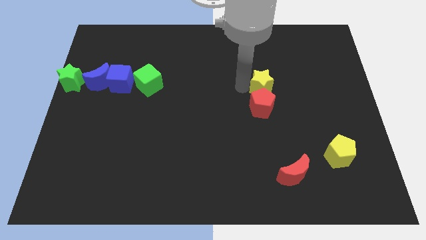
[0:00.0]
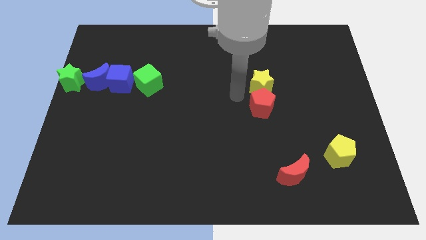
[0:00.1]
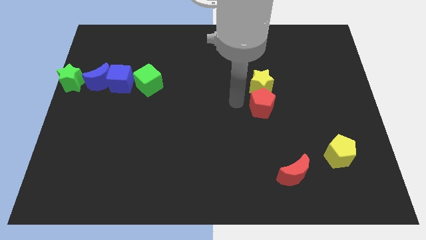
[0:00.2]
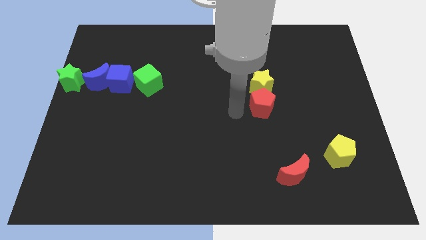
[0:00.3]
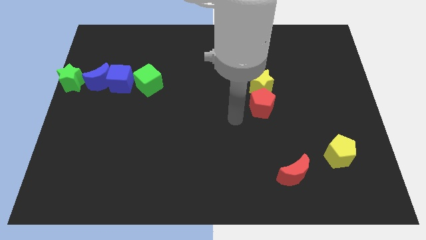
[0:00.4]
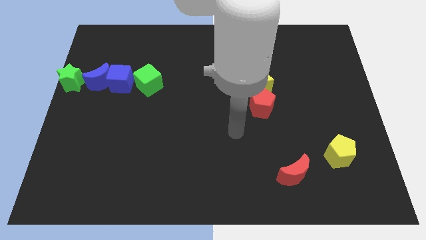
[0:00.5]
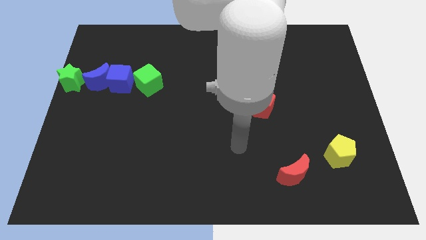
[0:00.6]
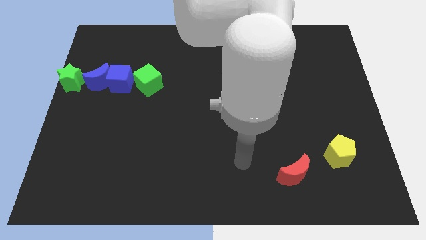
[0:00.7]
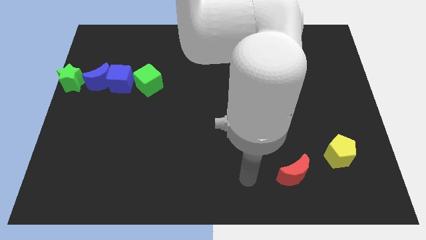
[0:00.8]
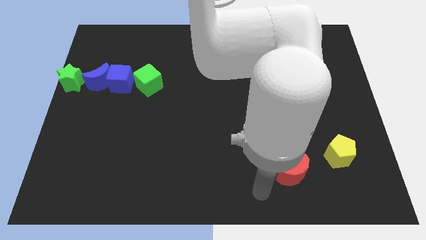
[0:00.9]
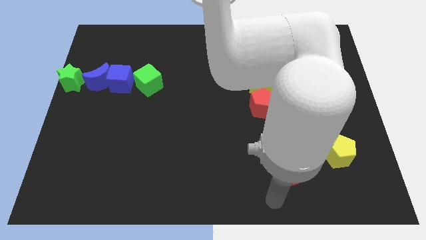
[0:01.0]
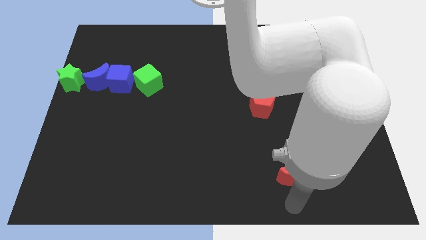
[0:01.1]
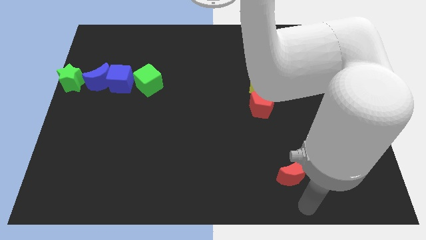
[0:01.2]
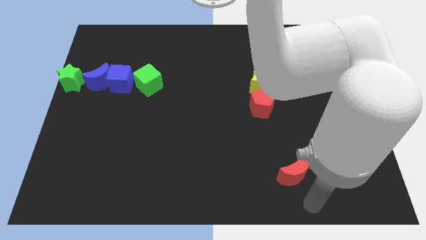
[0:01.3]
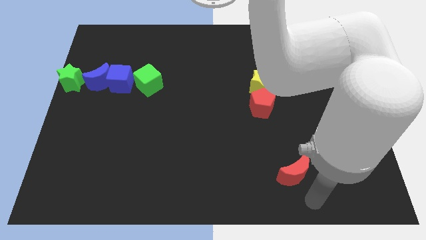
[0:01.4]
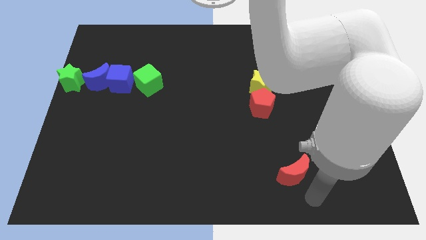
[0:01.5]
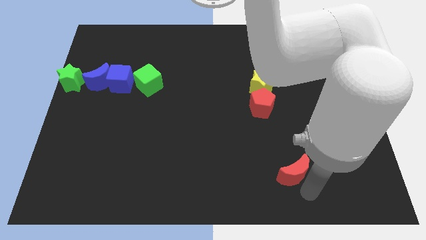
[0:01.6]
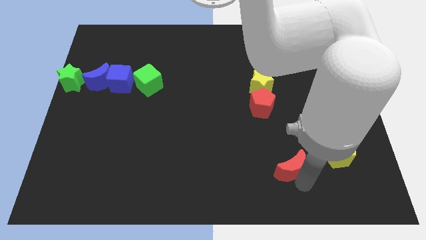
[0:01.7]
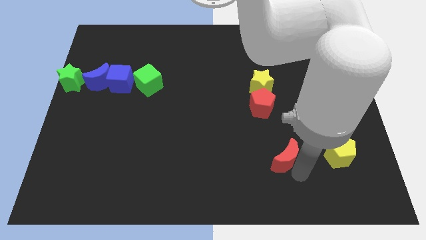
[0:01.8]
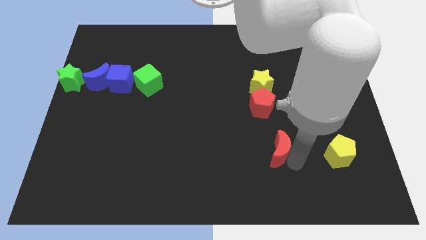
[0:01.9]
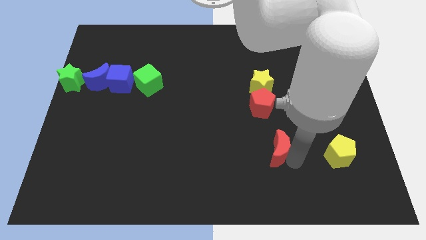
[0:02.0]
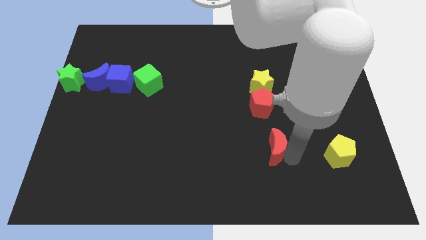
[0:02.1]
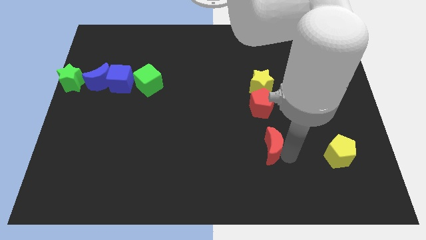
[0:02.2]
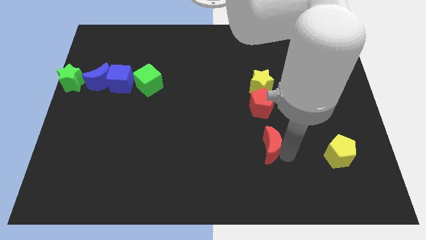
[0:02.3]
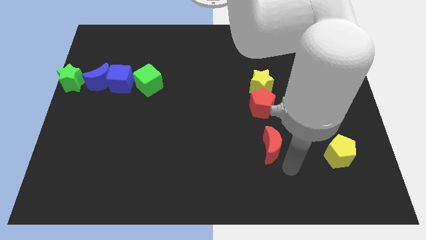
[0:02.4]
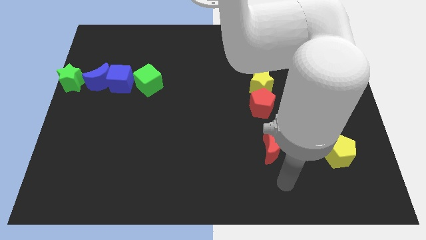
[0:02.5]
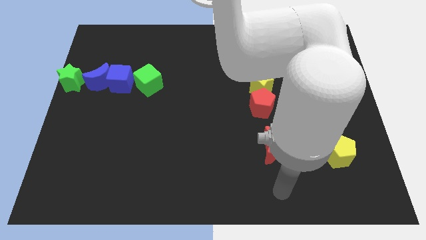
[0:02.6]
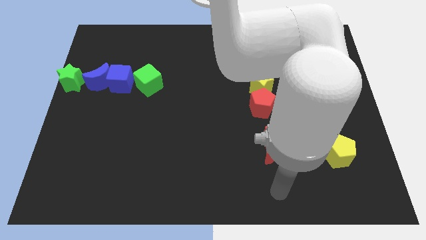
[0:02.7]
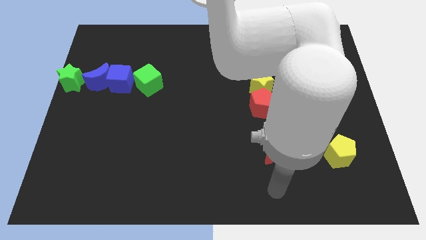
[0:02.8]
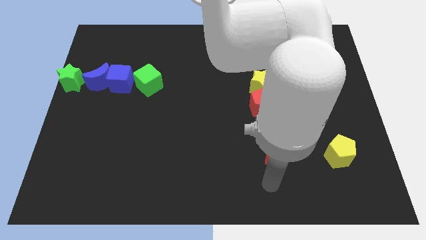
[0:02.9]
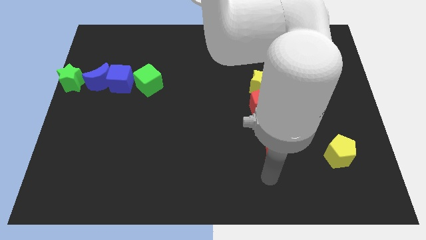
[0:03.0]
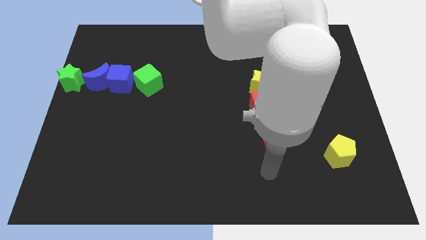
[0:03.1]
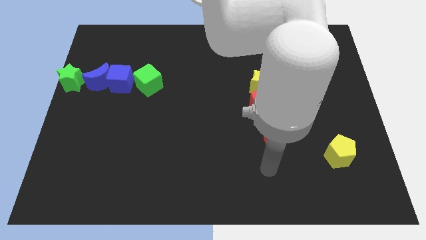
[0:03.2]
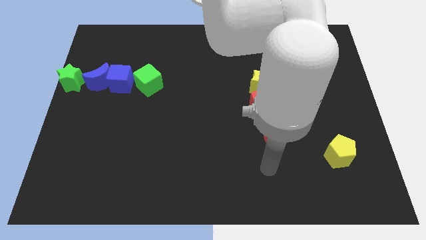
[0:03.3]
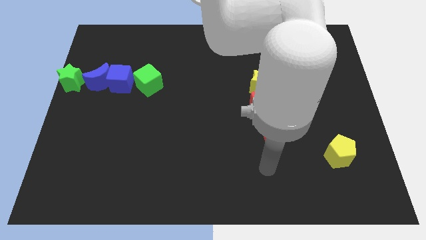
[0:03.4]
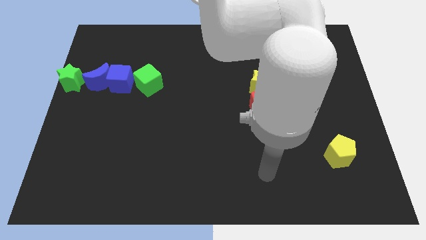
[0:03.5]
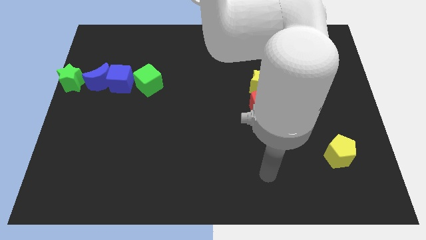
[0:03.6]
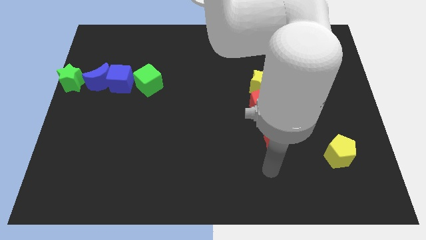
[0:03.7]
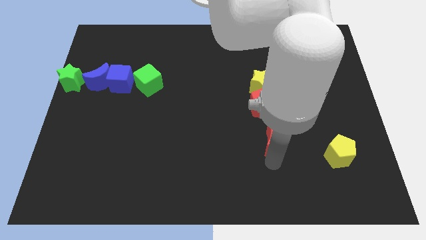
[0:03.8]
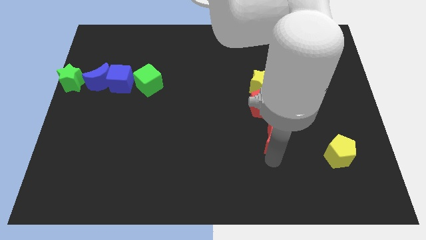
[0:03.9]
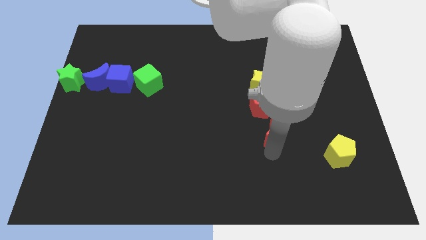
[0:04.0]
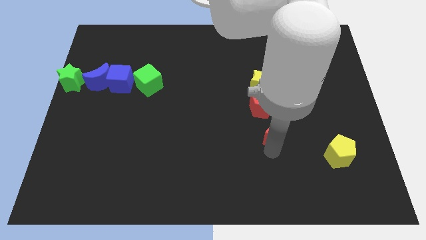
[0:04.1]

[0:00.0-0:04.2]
slide the red crescent towards the bottom side of the red pentagon

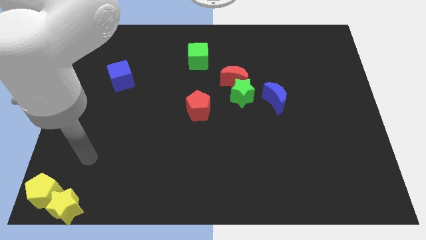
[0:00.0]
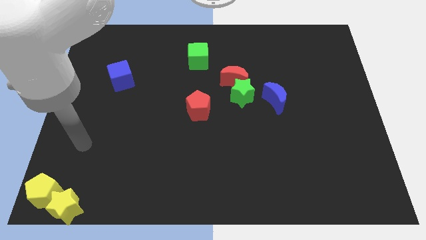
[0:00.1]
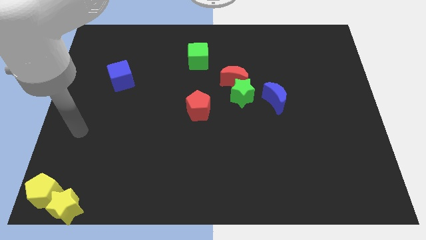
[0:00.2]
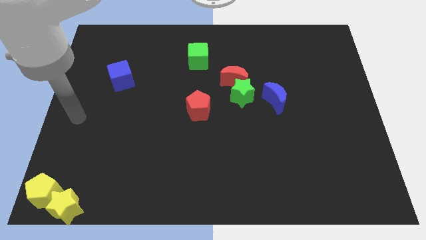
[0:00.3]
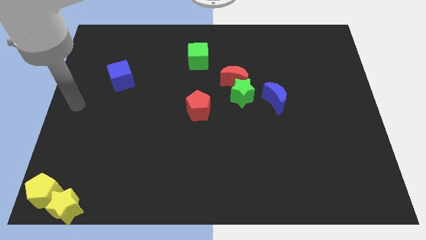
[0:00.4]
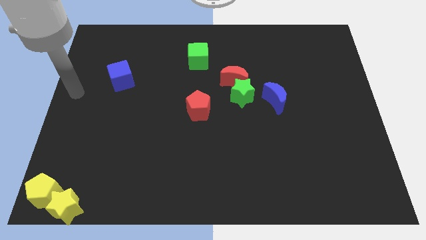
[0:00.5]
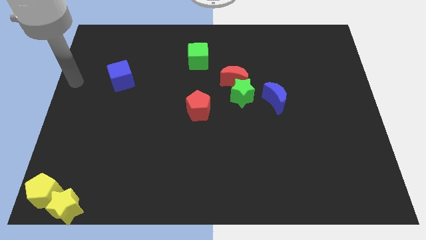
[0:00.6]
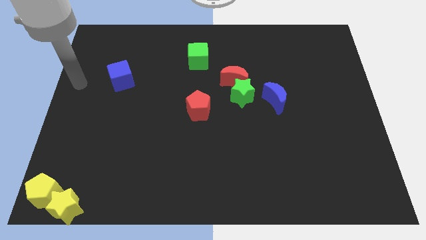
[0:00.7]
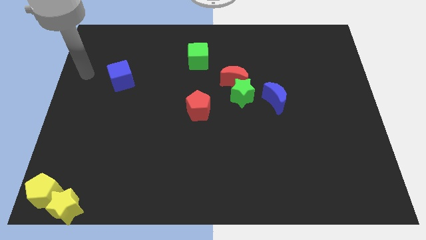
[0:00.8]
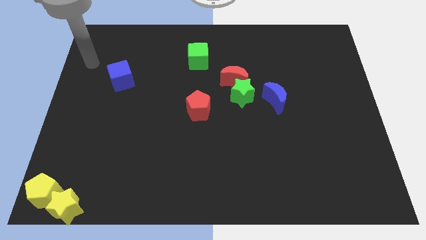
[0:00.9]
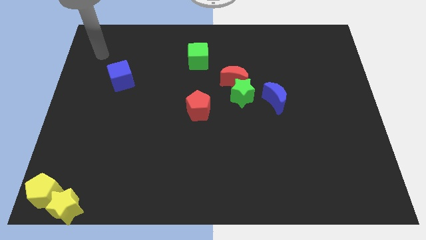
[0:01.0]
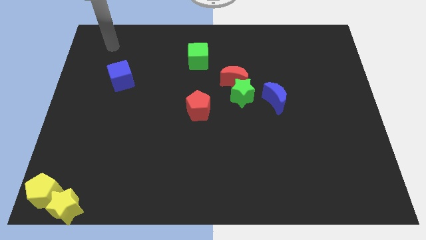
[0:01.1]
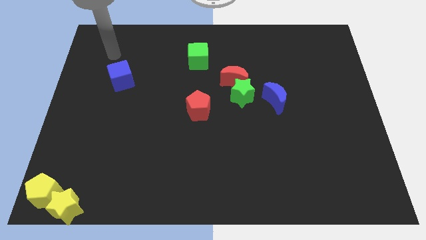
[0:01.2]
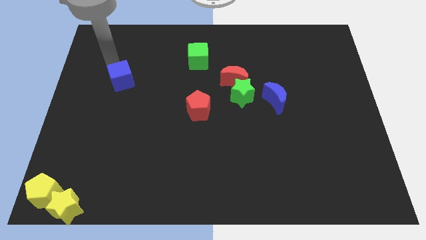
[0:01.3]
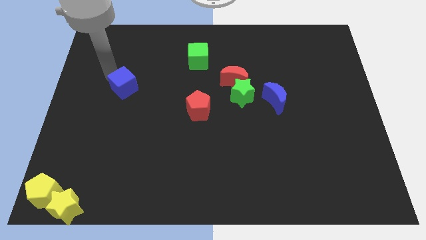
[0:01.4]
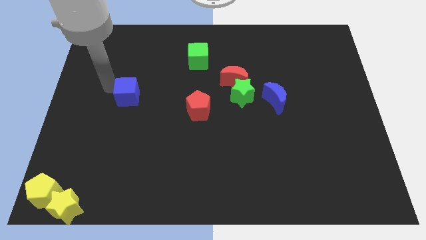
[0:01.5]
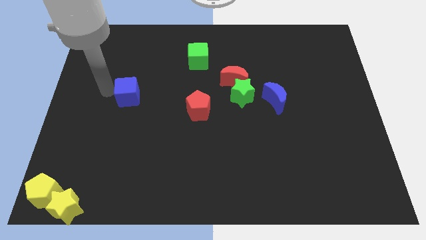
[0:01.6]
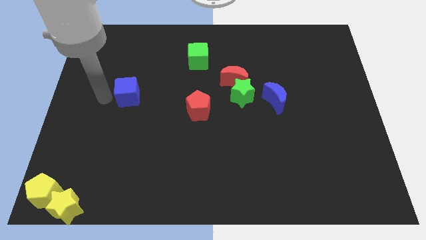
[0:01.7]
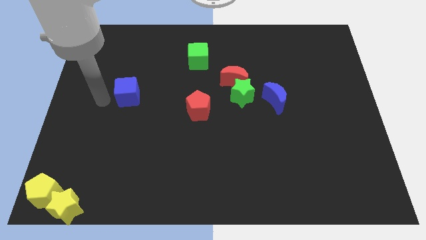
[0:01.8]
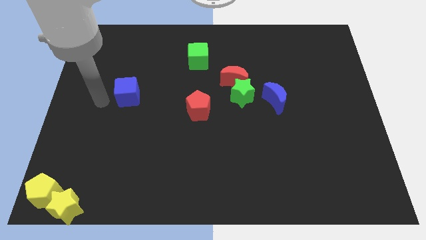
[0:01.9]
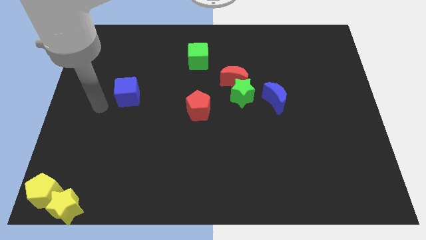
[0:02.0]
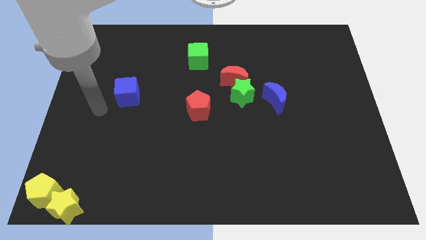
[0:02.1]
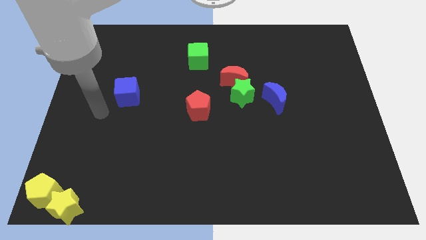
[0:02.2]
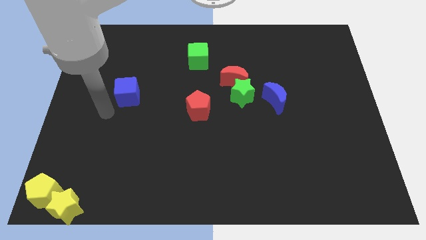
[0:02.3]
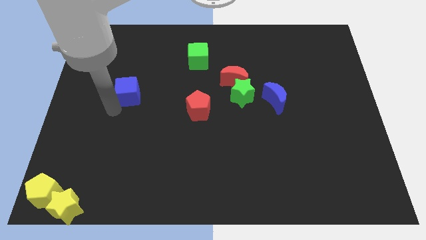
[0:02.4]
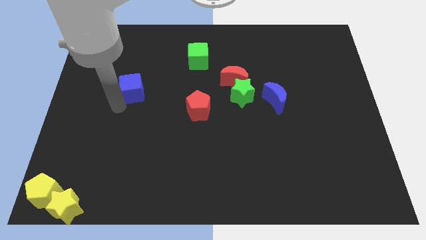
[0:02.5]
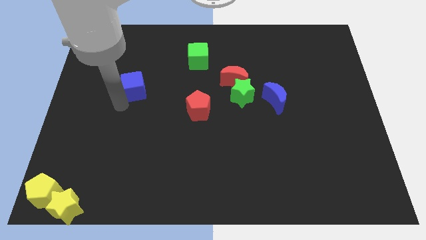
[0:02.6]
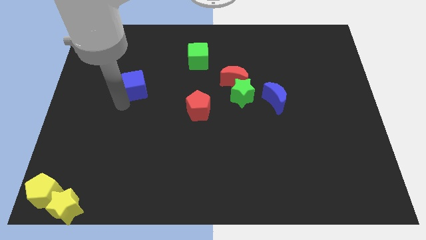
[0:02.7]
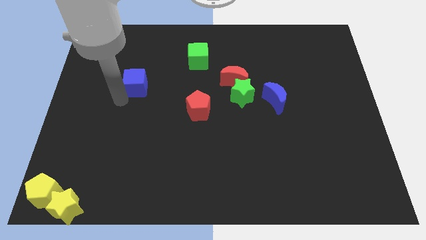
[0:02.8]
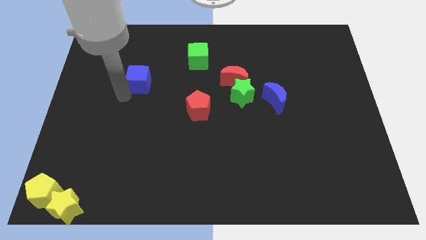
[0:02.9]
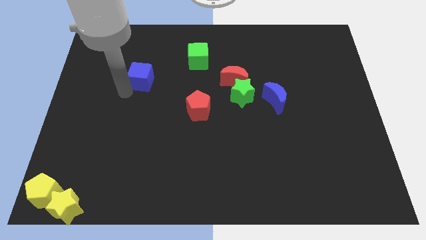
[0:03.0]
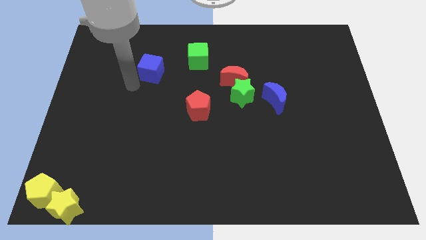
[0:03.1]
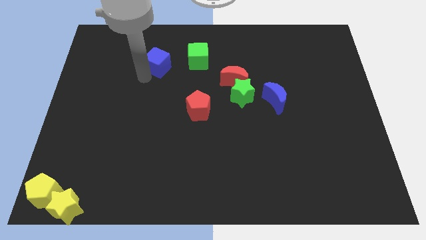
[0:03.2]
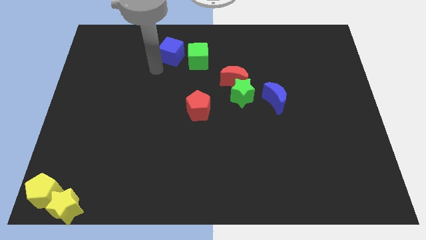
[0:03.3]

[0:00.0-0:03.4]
move blue cube left to the green cube

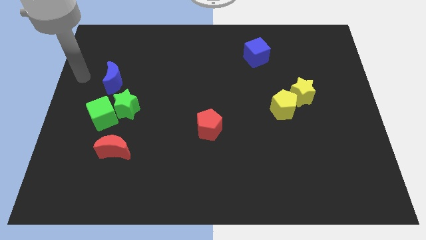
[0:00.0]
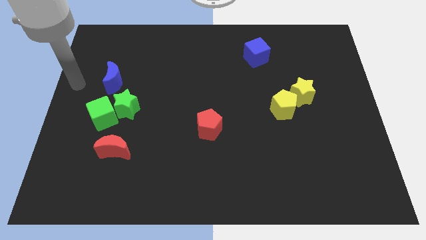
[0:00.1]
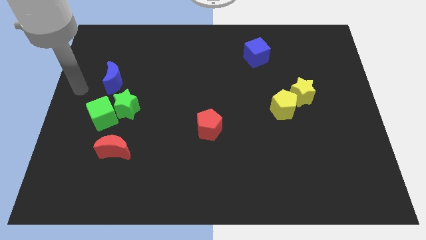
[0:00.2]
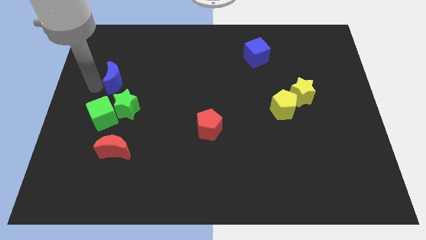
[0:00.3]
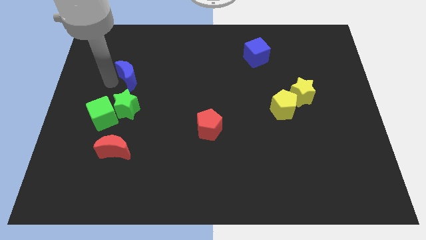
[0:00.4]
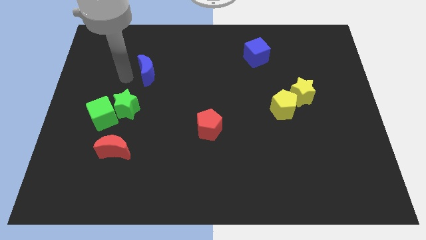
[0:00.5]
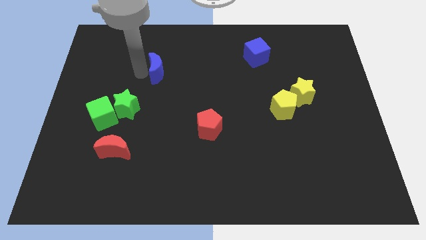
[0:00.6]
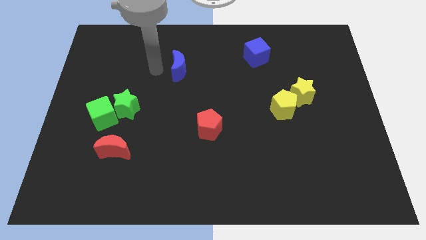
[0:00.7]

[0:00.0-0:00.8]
move the blue moon towards the top center

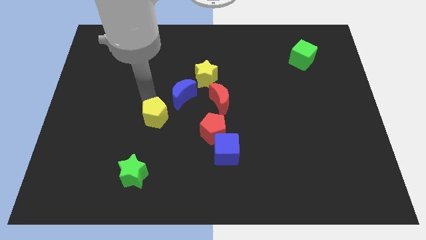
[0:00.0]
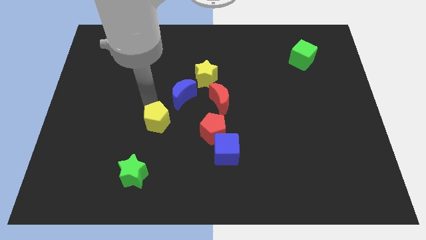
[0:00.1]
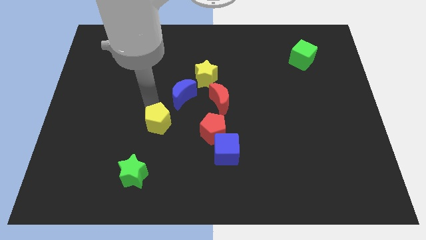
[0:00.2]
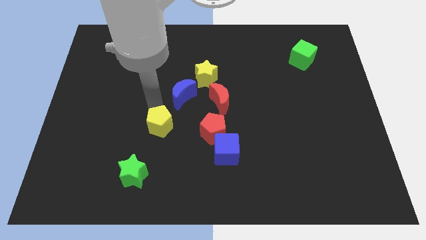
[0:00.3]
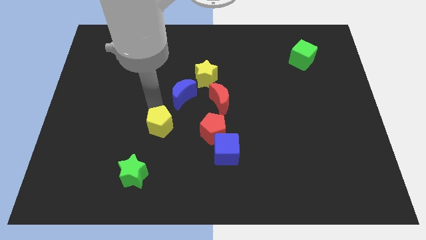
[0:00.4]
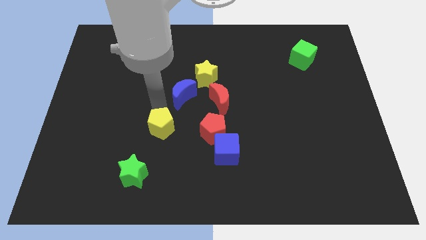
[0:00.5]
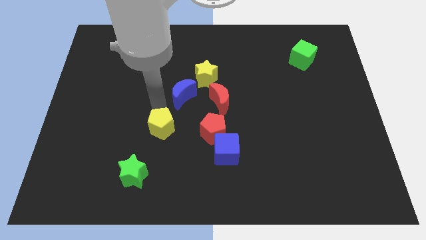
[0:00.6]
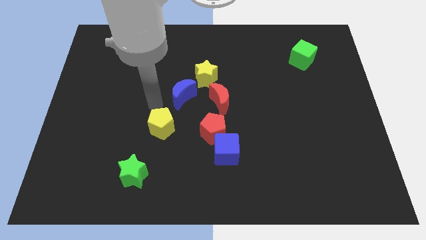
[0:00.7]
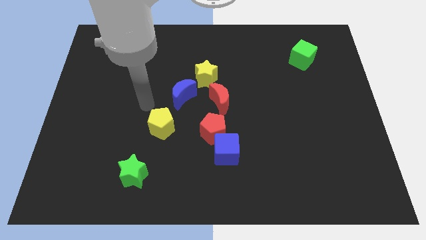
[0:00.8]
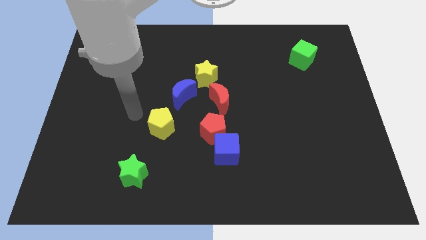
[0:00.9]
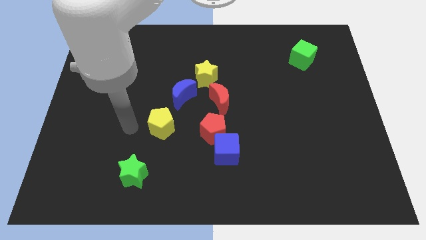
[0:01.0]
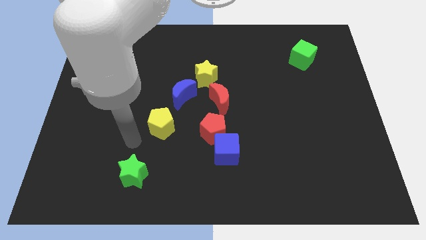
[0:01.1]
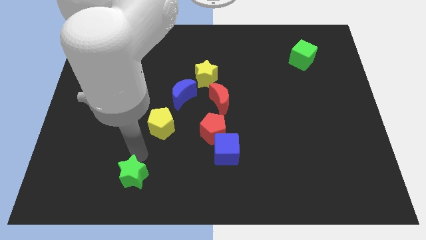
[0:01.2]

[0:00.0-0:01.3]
move yellow pentagon
